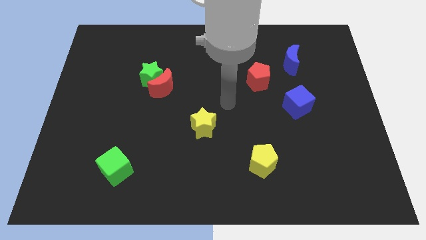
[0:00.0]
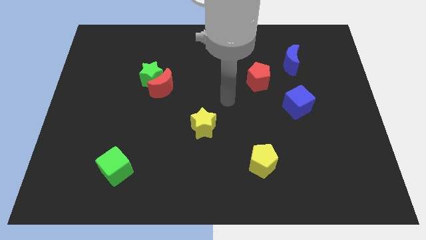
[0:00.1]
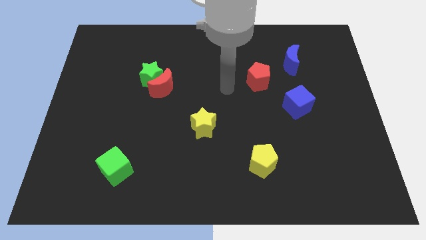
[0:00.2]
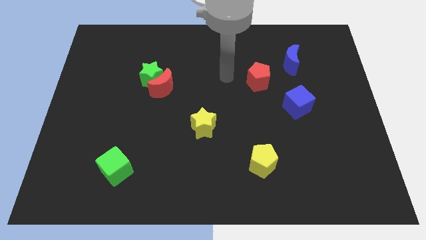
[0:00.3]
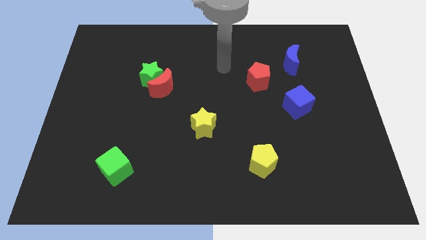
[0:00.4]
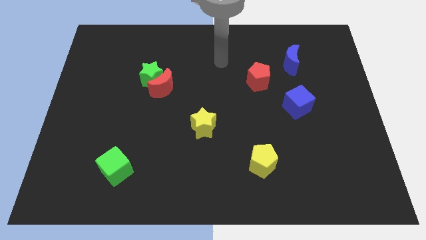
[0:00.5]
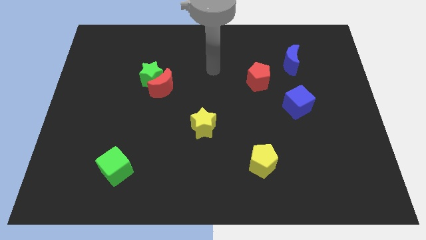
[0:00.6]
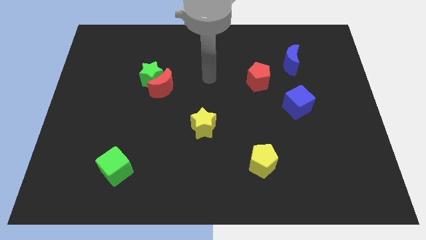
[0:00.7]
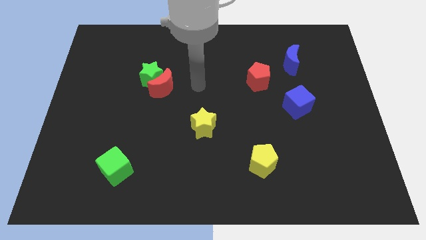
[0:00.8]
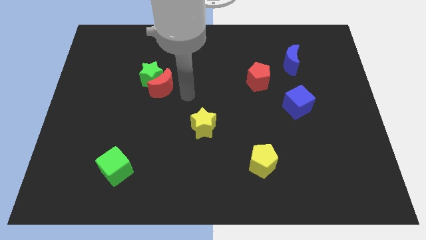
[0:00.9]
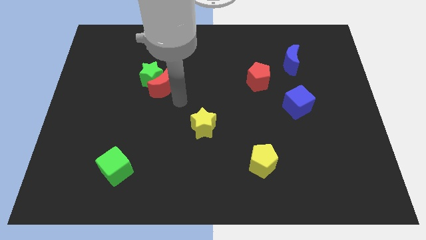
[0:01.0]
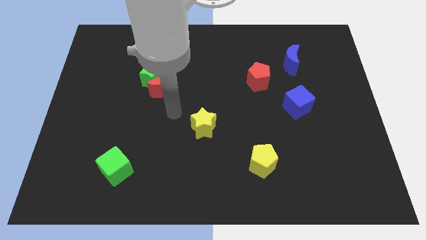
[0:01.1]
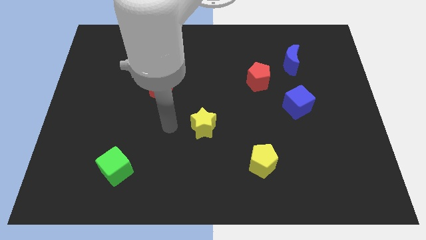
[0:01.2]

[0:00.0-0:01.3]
place your arm at the left side of the yellow star

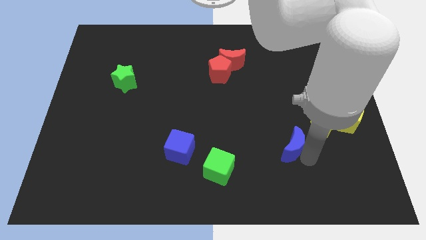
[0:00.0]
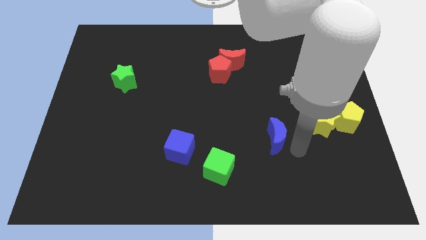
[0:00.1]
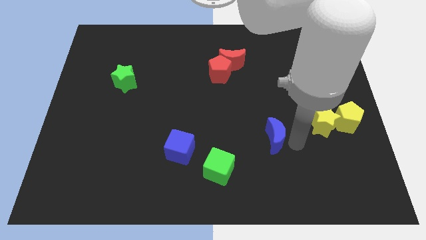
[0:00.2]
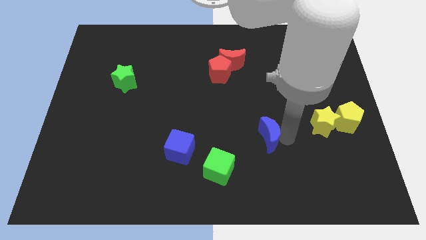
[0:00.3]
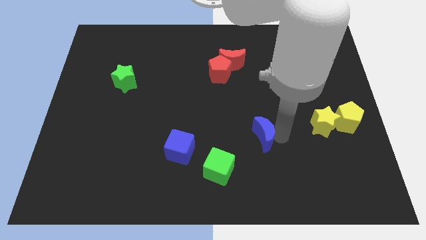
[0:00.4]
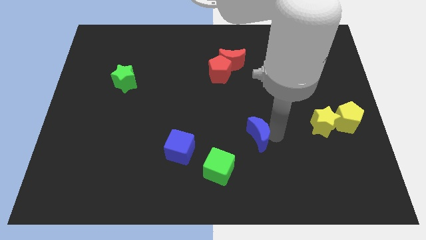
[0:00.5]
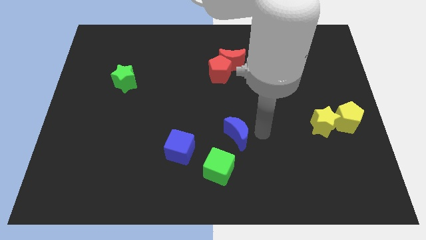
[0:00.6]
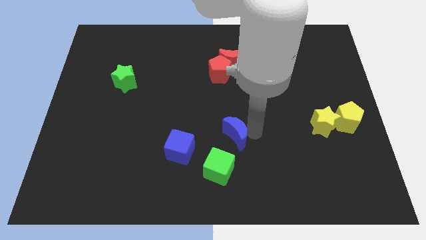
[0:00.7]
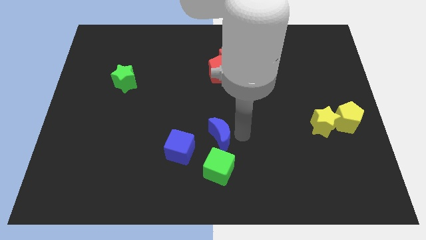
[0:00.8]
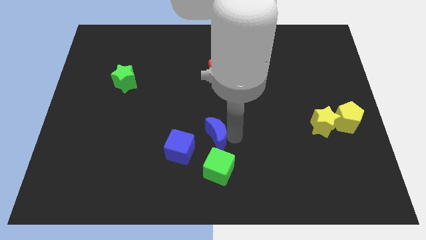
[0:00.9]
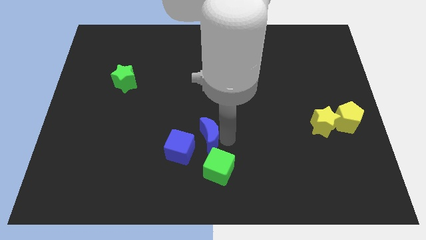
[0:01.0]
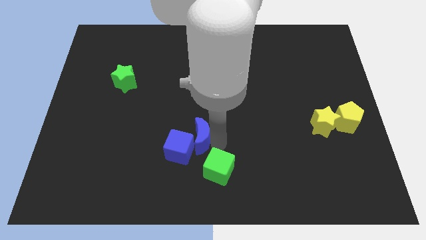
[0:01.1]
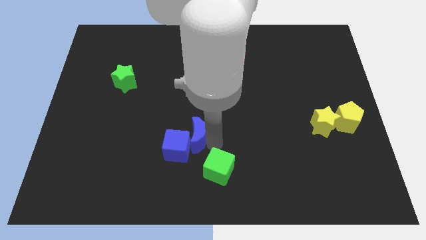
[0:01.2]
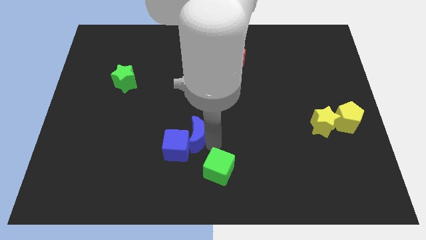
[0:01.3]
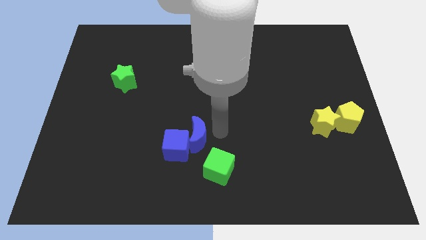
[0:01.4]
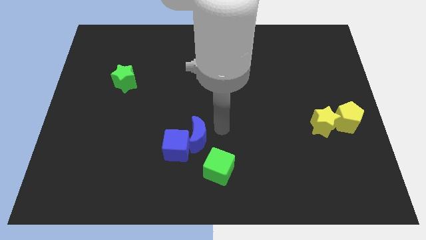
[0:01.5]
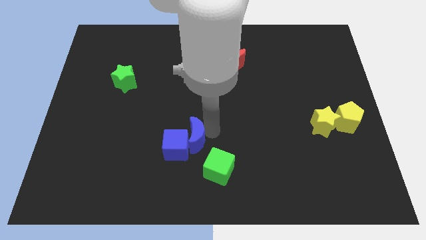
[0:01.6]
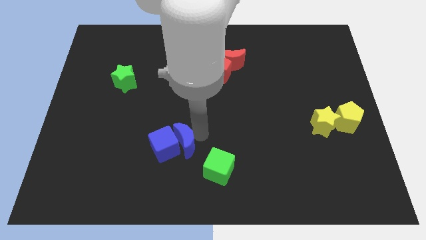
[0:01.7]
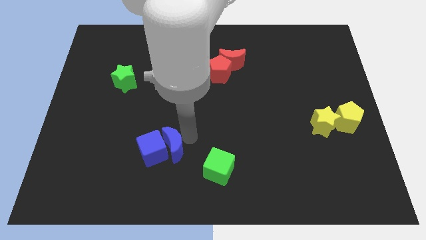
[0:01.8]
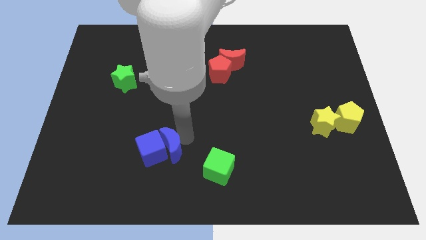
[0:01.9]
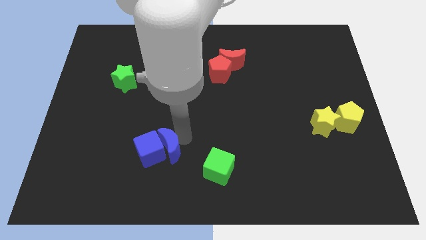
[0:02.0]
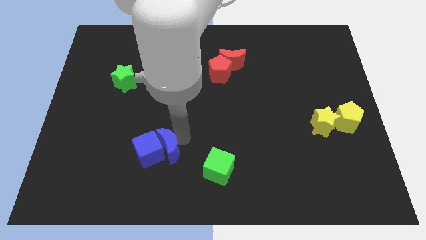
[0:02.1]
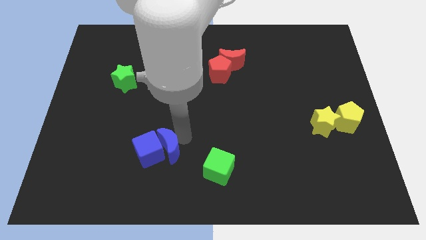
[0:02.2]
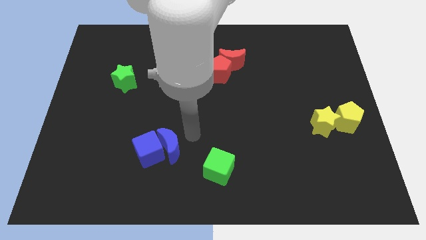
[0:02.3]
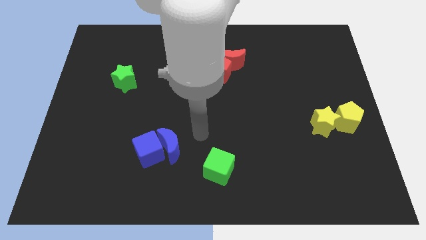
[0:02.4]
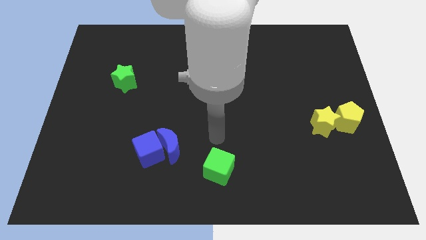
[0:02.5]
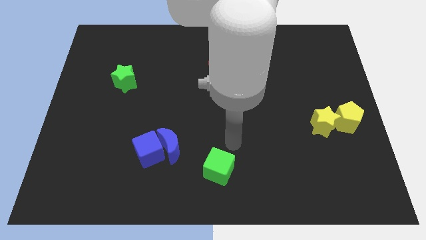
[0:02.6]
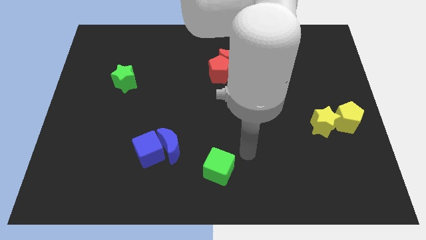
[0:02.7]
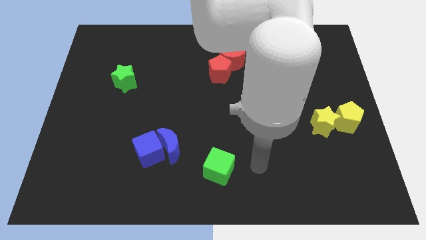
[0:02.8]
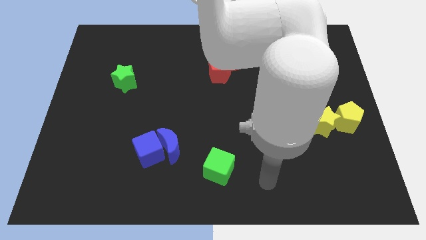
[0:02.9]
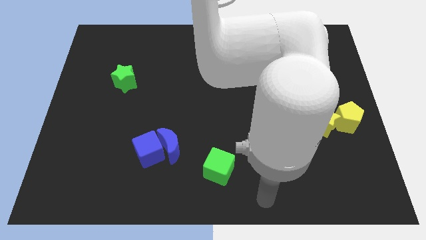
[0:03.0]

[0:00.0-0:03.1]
drag the blue moon into the blue cube

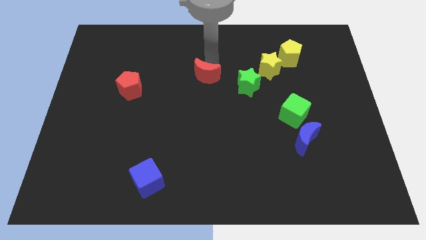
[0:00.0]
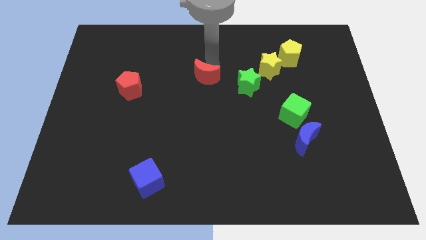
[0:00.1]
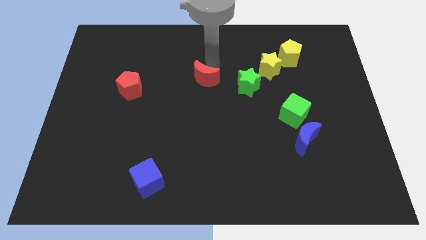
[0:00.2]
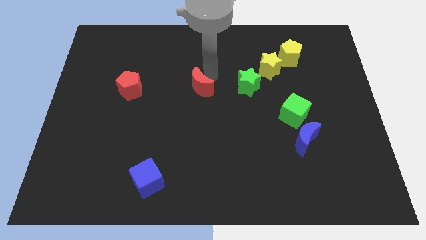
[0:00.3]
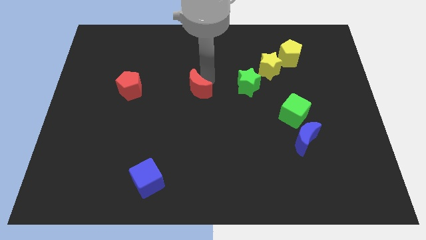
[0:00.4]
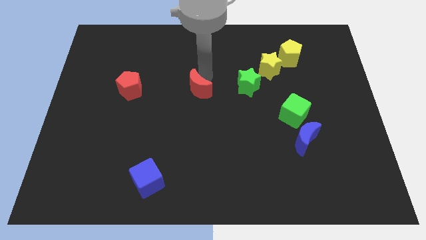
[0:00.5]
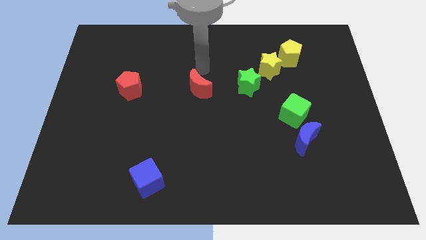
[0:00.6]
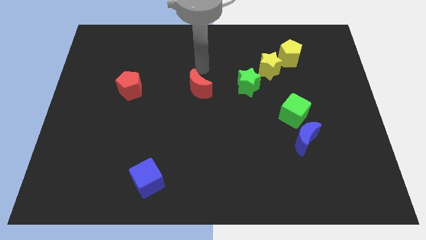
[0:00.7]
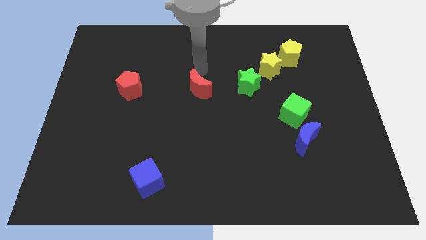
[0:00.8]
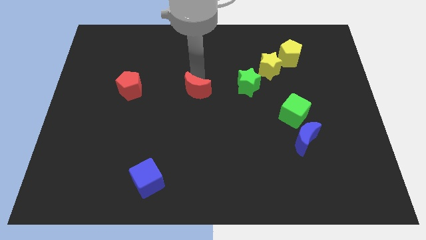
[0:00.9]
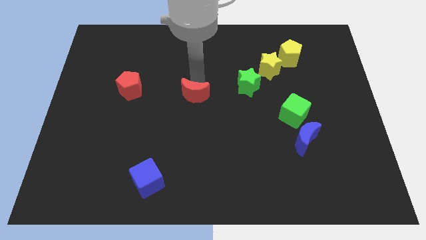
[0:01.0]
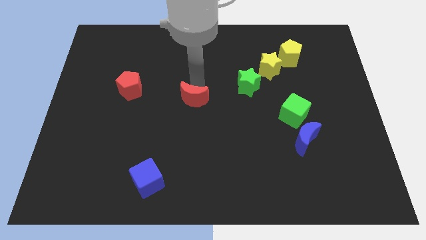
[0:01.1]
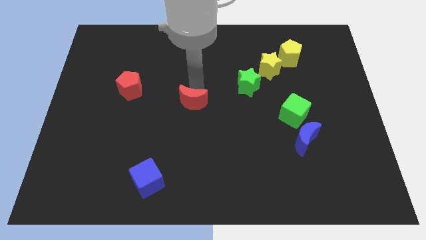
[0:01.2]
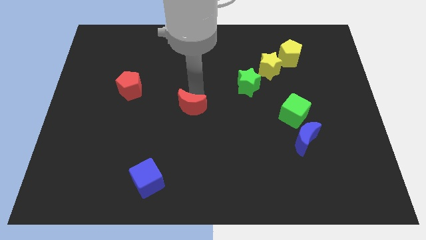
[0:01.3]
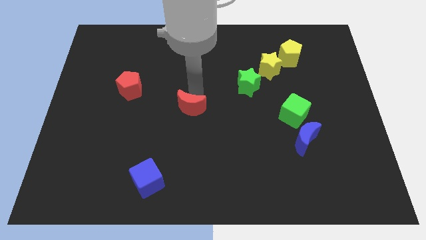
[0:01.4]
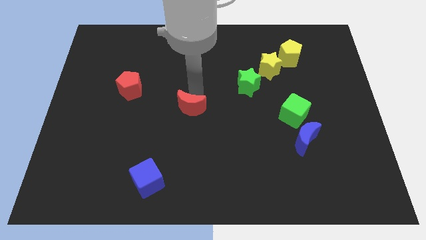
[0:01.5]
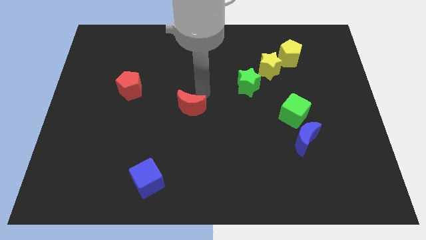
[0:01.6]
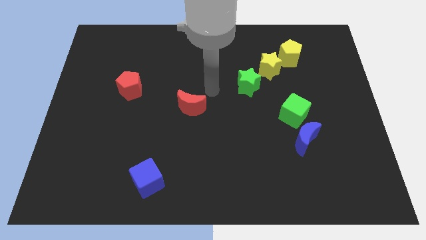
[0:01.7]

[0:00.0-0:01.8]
move the red crescent to the bottom left of the green star

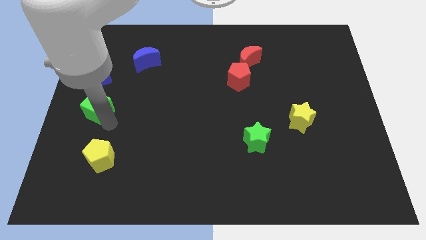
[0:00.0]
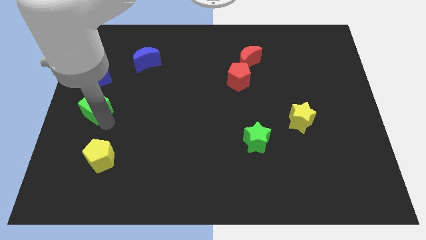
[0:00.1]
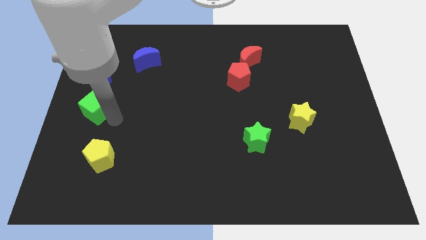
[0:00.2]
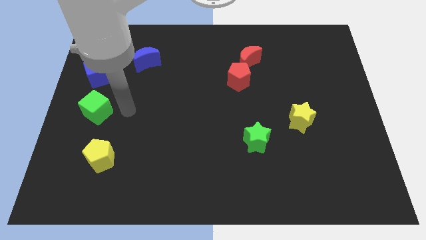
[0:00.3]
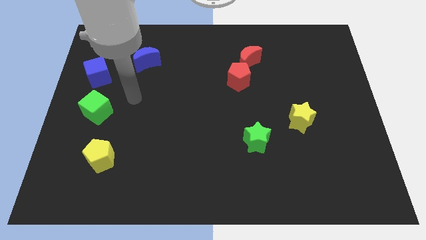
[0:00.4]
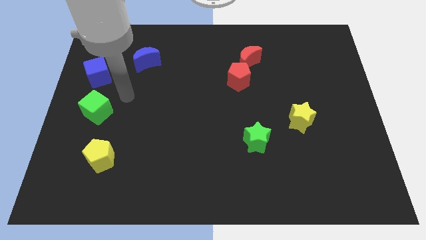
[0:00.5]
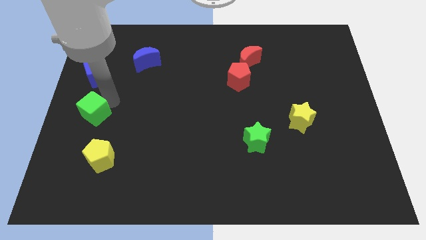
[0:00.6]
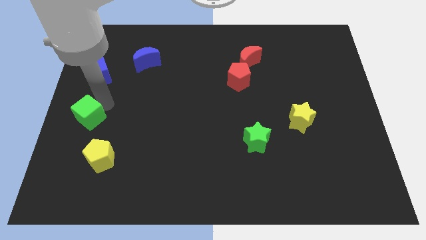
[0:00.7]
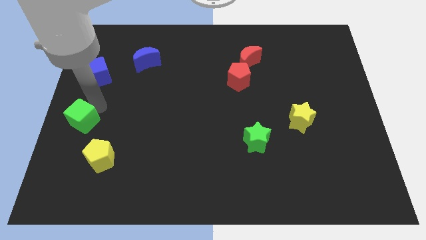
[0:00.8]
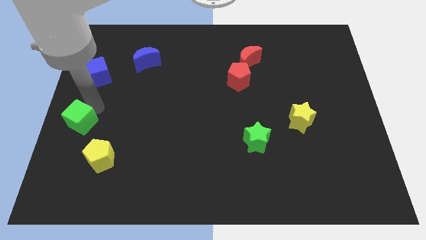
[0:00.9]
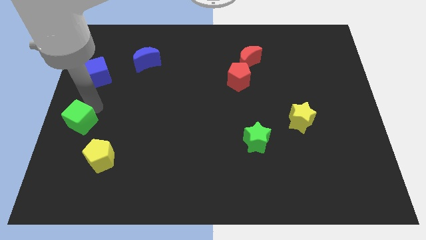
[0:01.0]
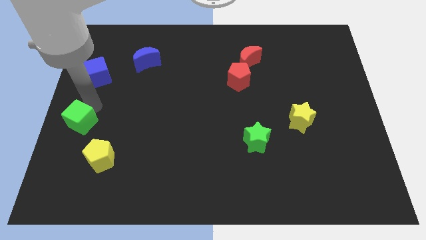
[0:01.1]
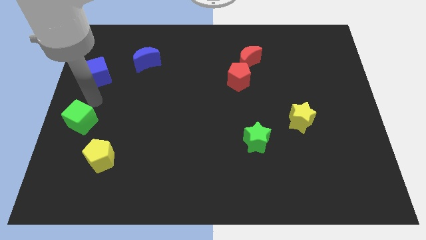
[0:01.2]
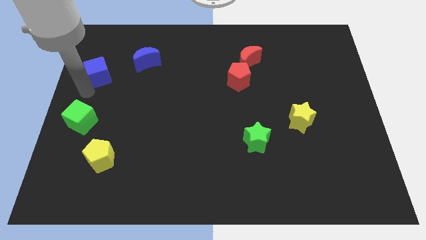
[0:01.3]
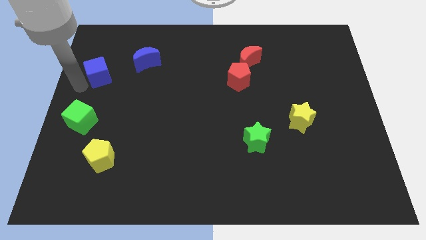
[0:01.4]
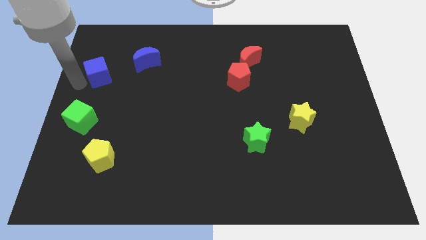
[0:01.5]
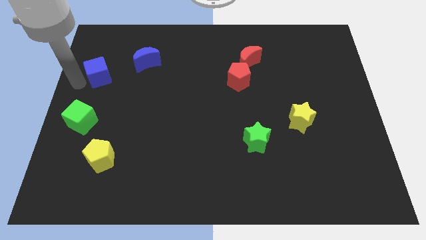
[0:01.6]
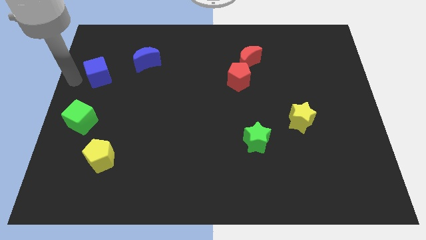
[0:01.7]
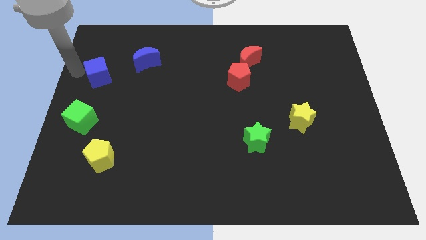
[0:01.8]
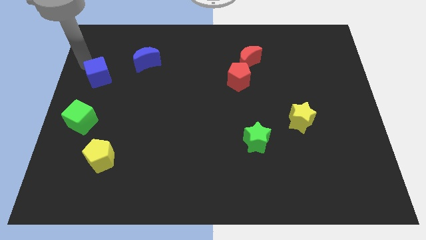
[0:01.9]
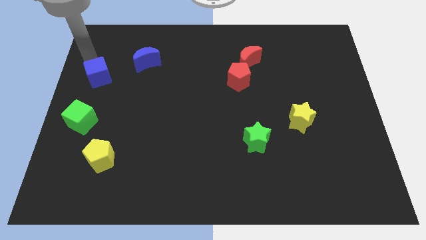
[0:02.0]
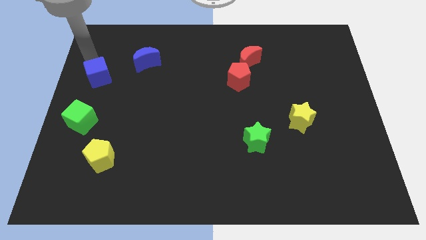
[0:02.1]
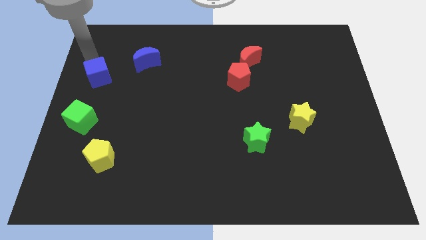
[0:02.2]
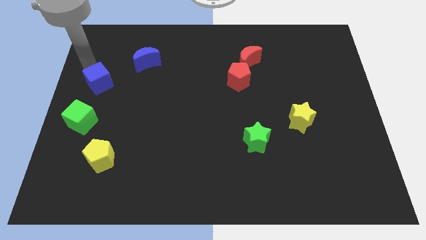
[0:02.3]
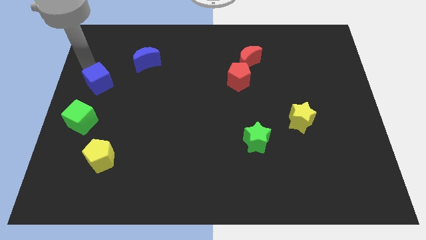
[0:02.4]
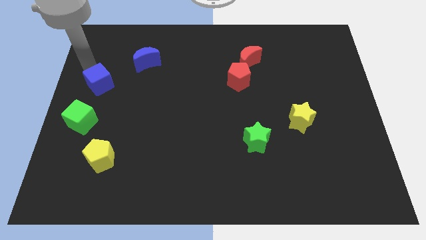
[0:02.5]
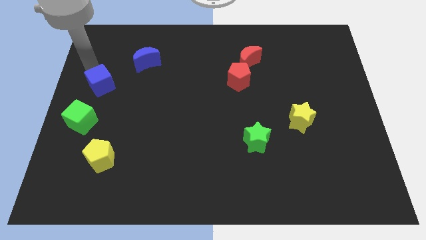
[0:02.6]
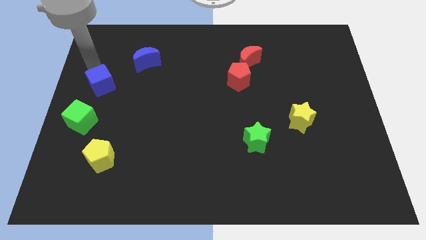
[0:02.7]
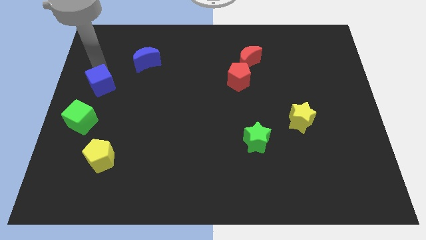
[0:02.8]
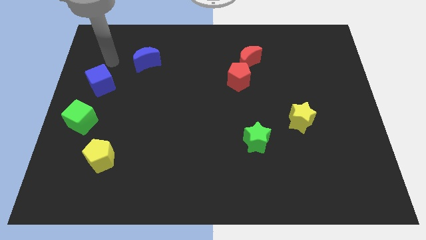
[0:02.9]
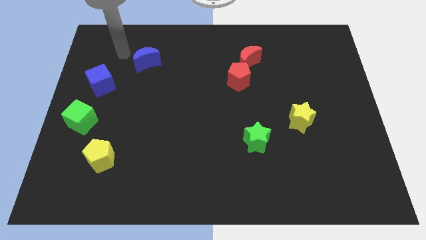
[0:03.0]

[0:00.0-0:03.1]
arrange the green cube and blue cube at the left center of the board
